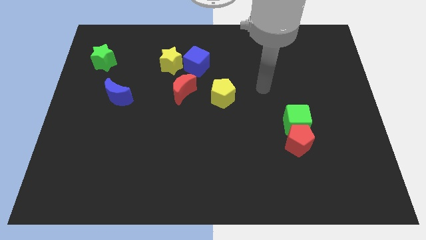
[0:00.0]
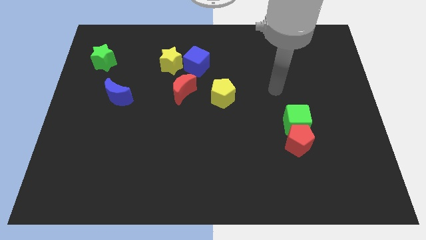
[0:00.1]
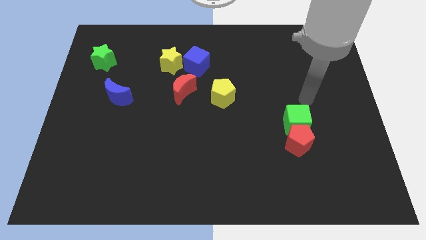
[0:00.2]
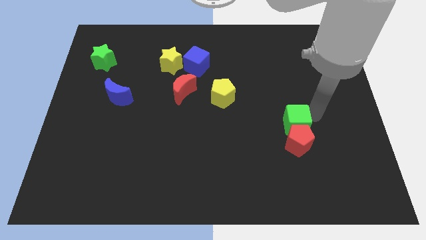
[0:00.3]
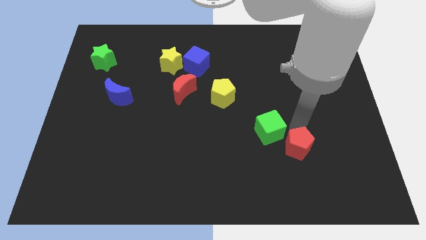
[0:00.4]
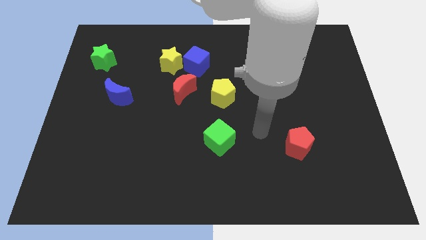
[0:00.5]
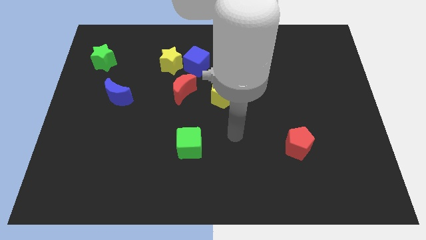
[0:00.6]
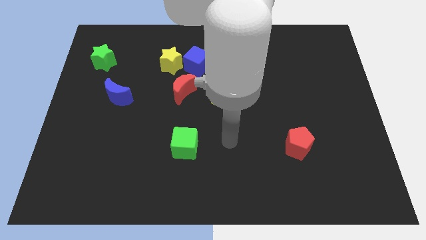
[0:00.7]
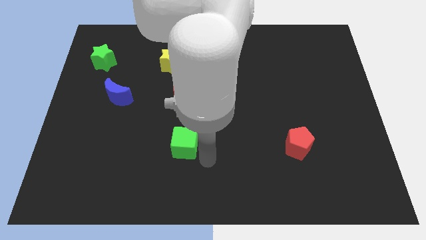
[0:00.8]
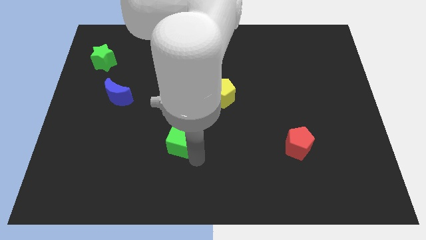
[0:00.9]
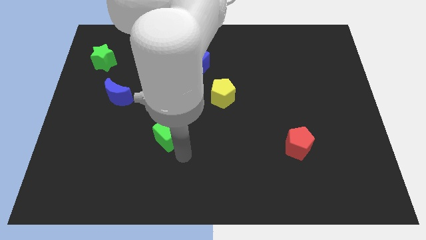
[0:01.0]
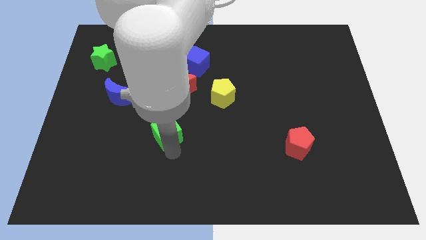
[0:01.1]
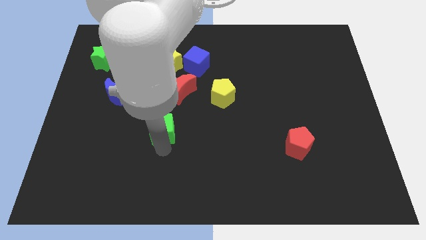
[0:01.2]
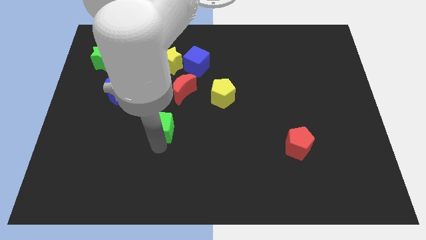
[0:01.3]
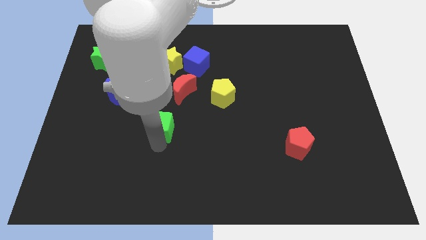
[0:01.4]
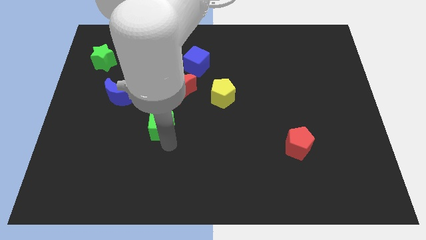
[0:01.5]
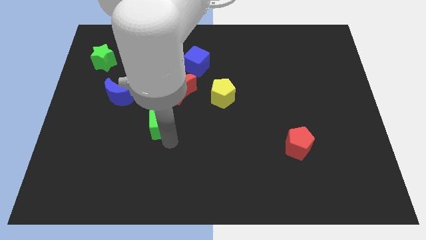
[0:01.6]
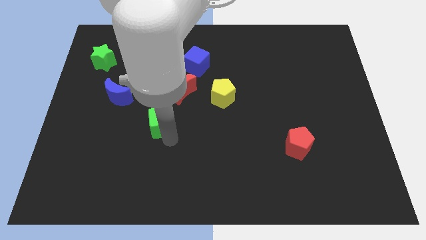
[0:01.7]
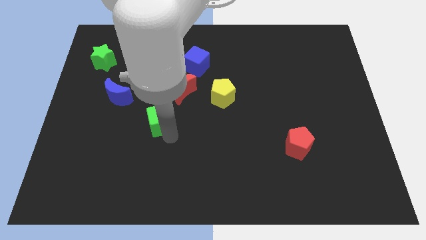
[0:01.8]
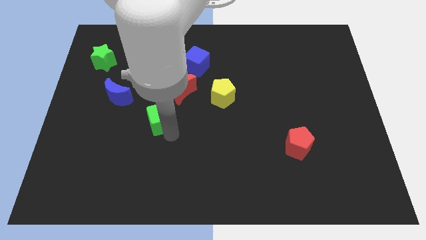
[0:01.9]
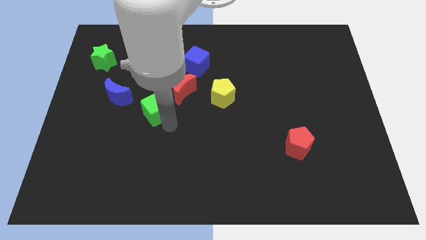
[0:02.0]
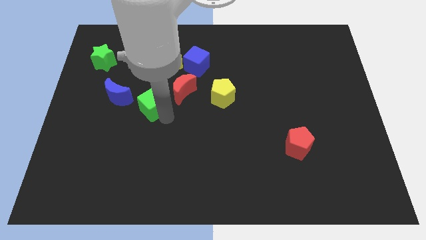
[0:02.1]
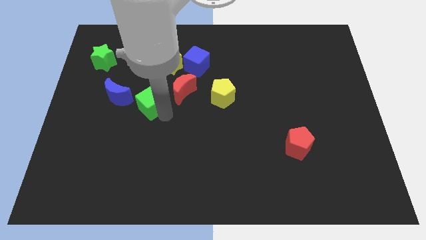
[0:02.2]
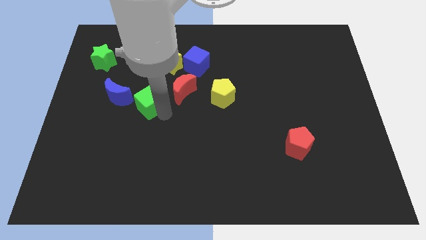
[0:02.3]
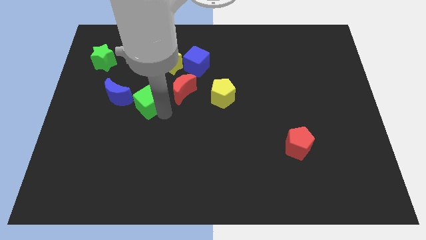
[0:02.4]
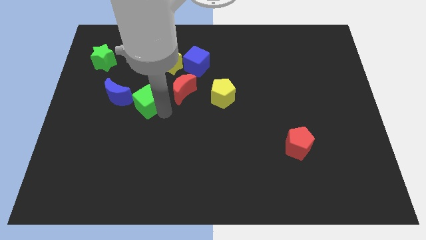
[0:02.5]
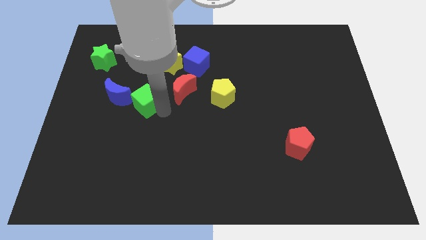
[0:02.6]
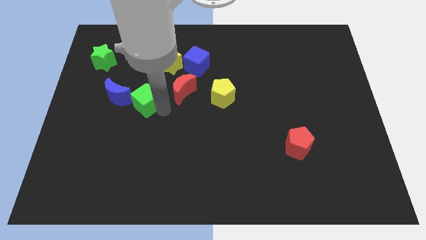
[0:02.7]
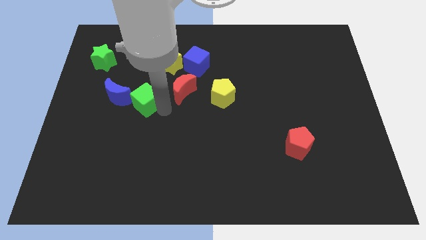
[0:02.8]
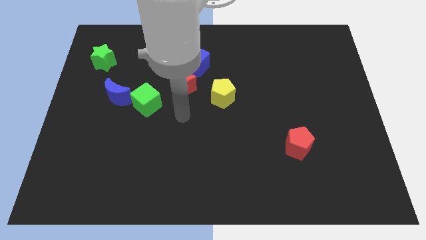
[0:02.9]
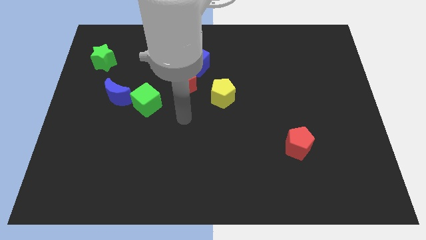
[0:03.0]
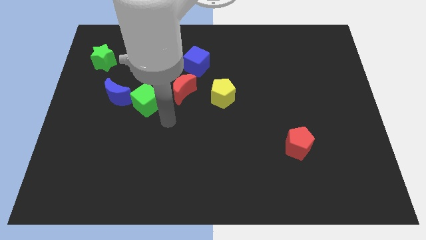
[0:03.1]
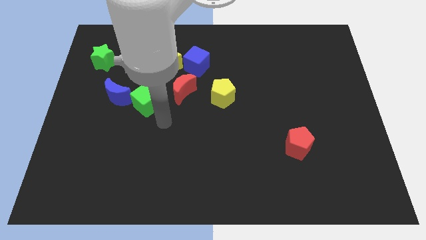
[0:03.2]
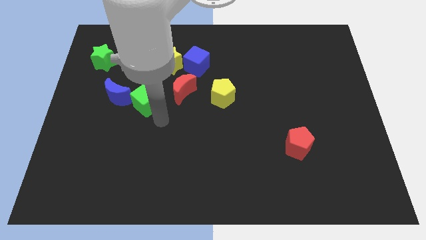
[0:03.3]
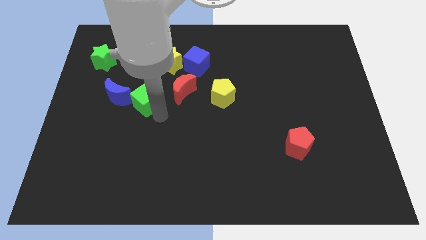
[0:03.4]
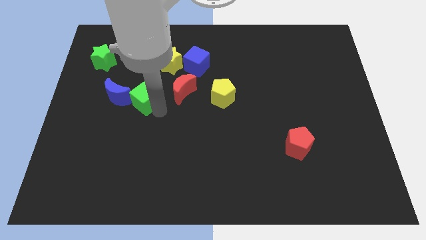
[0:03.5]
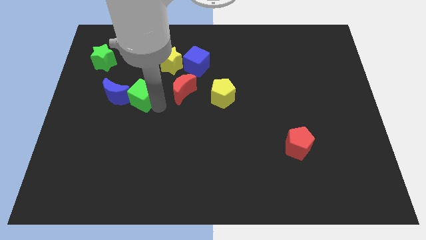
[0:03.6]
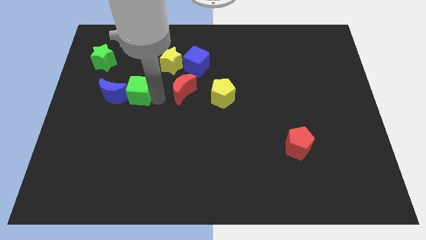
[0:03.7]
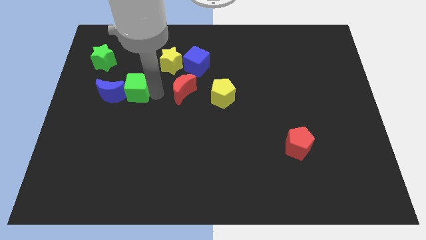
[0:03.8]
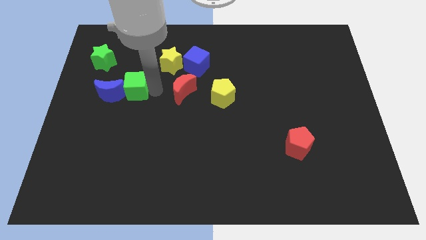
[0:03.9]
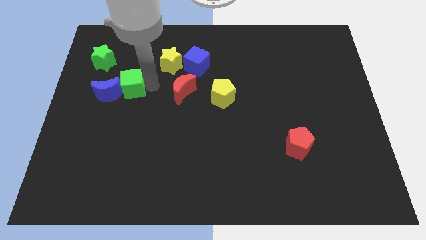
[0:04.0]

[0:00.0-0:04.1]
put the green cube to the blue moon

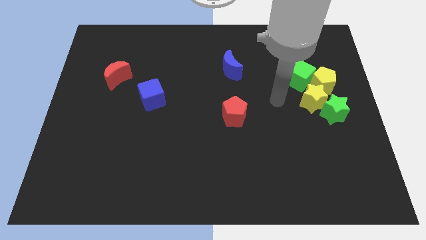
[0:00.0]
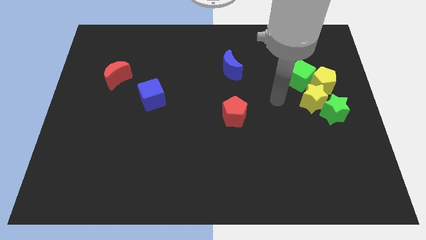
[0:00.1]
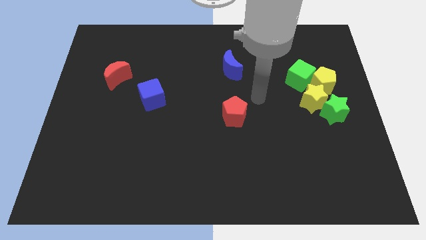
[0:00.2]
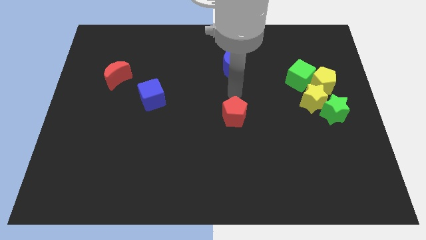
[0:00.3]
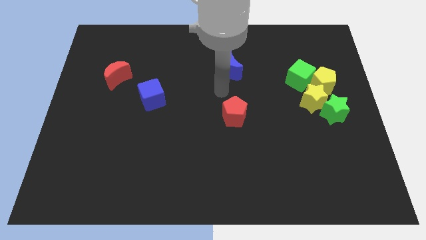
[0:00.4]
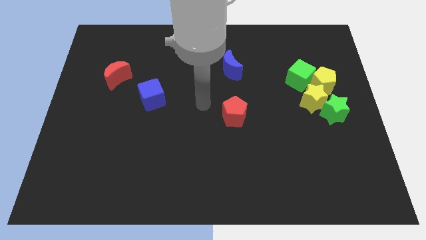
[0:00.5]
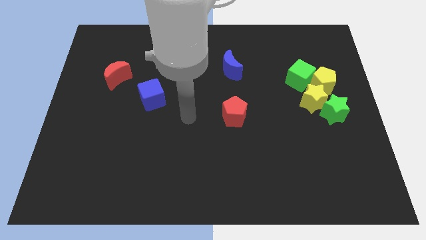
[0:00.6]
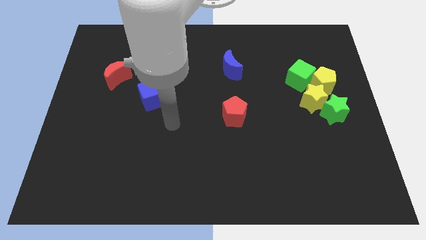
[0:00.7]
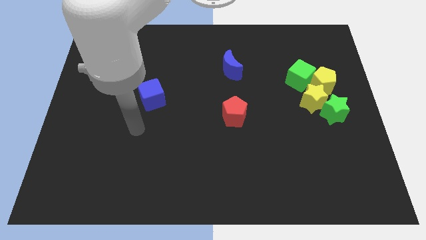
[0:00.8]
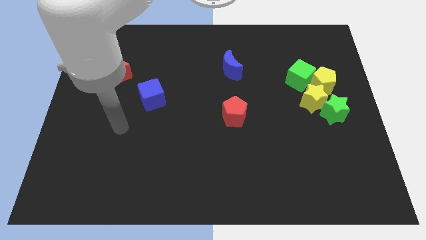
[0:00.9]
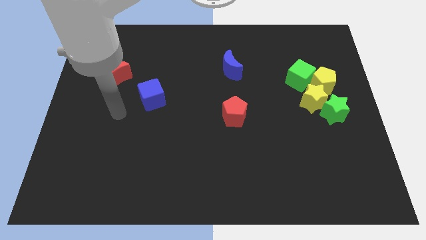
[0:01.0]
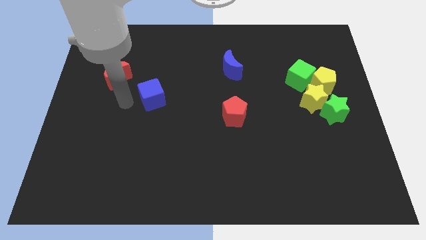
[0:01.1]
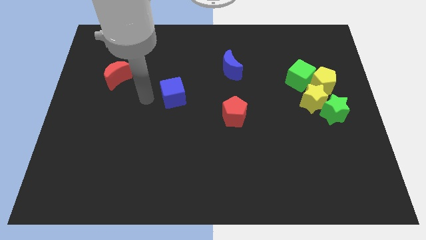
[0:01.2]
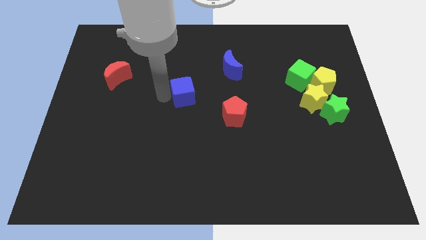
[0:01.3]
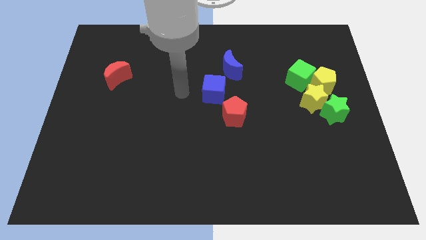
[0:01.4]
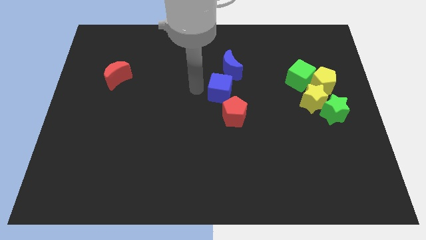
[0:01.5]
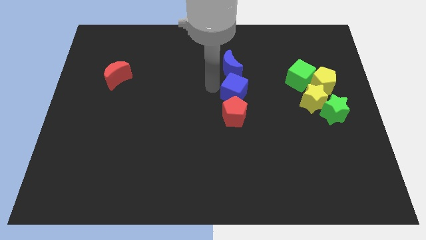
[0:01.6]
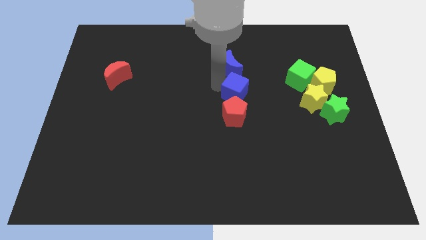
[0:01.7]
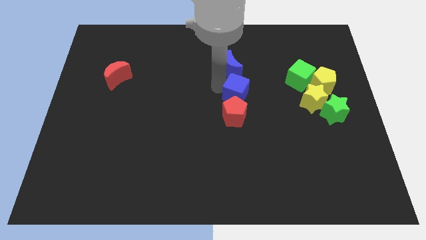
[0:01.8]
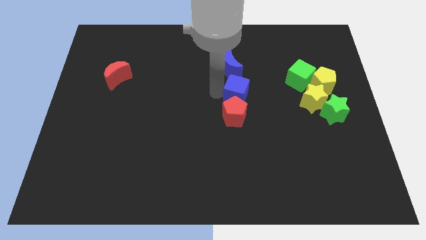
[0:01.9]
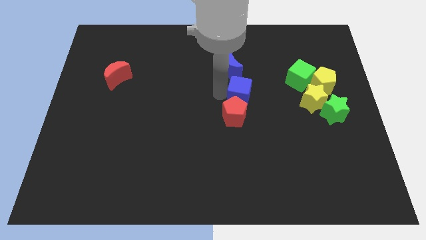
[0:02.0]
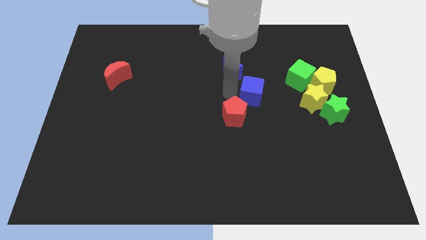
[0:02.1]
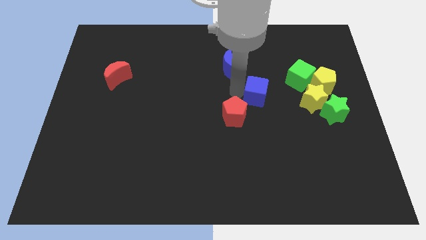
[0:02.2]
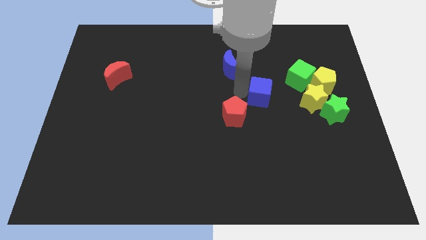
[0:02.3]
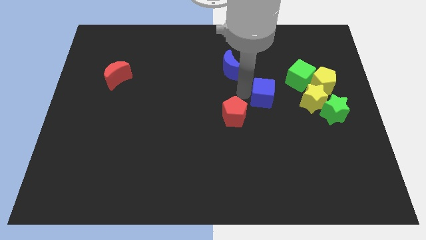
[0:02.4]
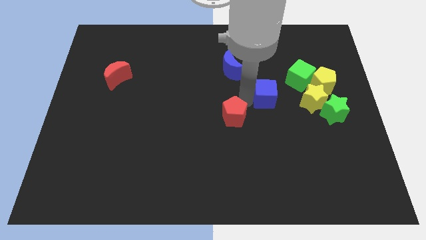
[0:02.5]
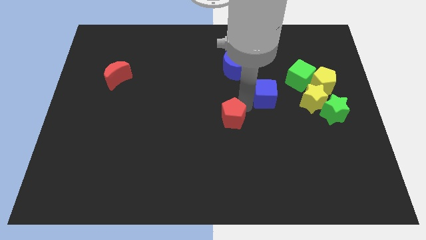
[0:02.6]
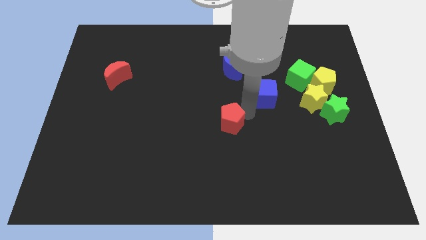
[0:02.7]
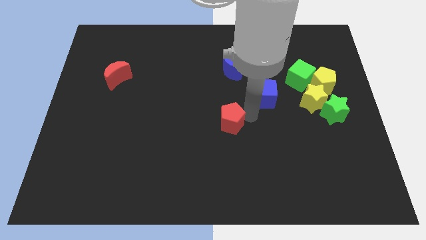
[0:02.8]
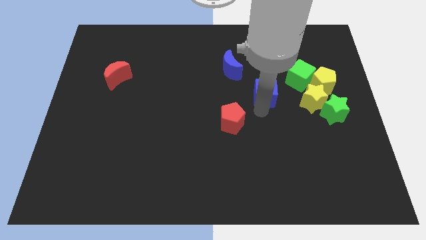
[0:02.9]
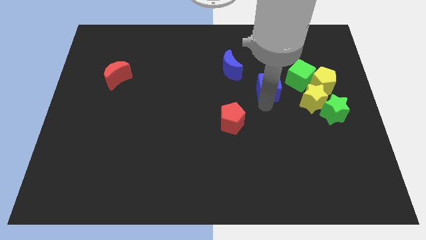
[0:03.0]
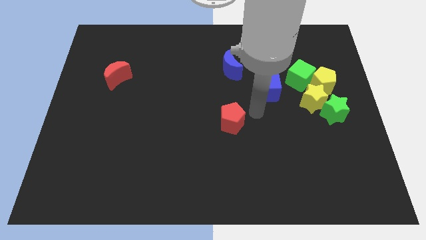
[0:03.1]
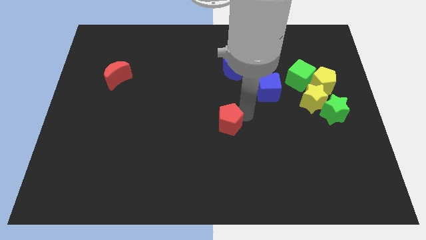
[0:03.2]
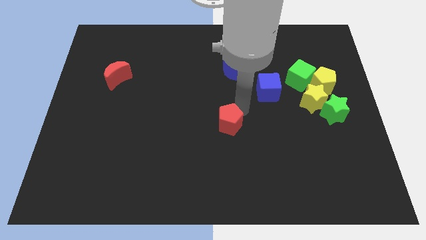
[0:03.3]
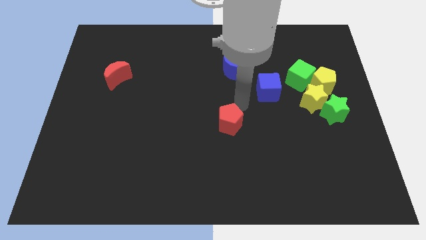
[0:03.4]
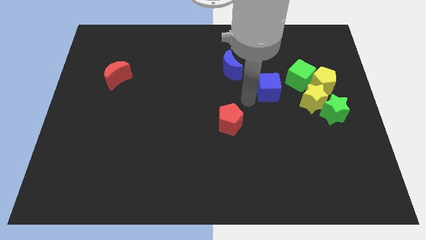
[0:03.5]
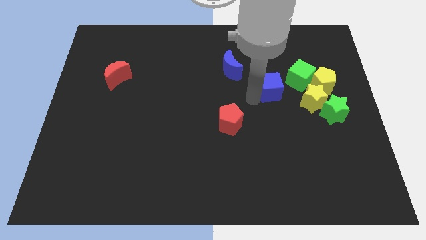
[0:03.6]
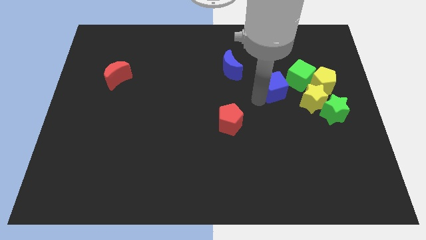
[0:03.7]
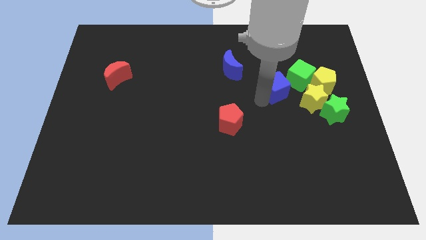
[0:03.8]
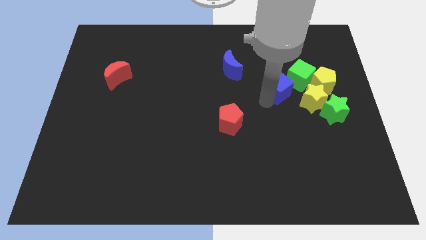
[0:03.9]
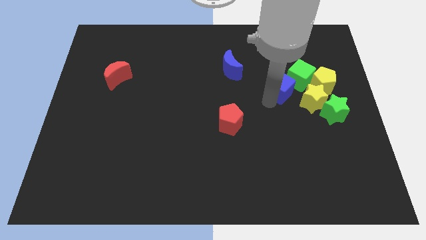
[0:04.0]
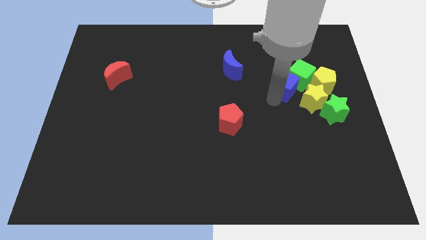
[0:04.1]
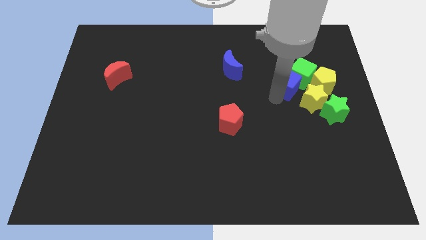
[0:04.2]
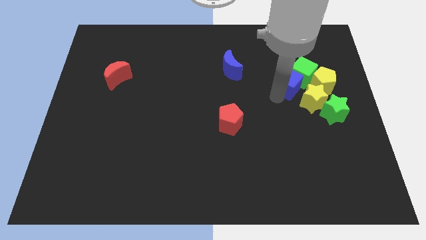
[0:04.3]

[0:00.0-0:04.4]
move the blue cube towards the green cube
